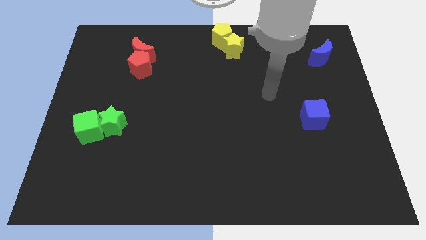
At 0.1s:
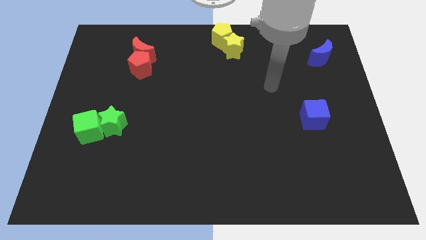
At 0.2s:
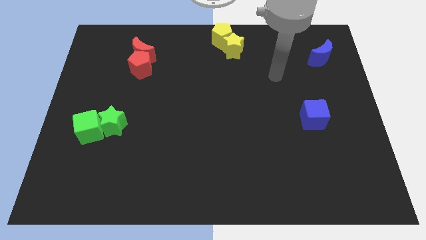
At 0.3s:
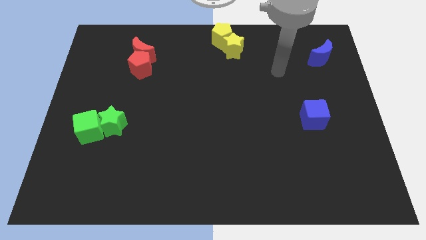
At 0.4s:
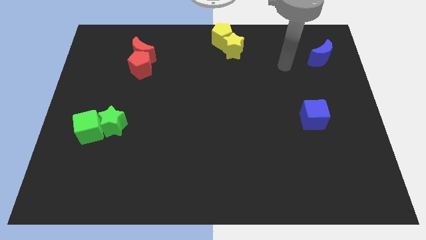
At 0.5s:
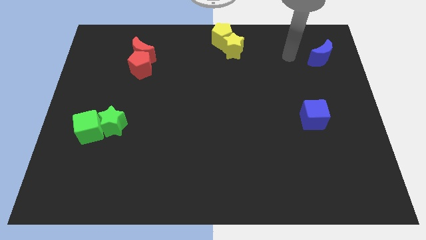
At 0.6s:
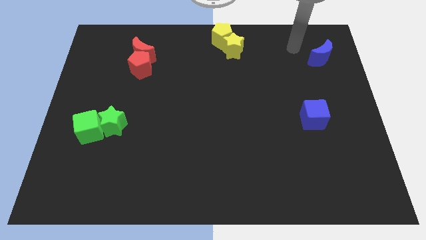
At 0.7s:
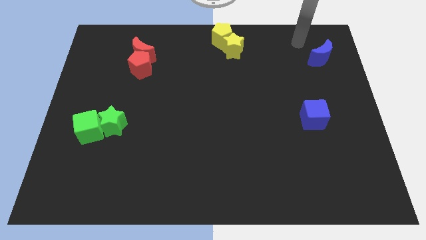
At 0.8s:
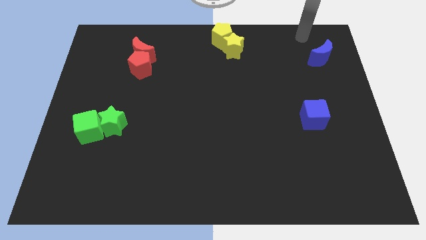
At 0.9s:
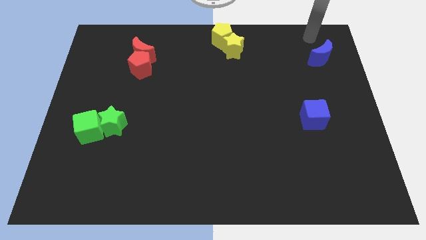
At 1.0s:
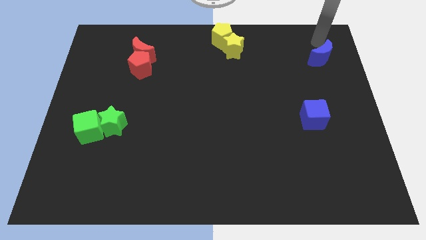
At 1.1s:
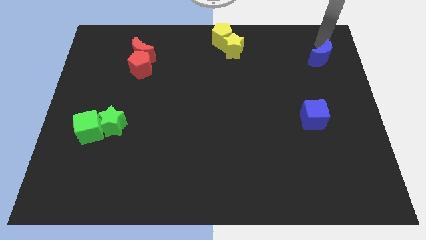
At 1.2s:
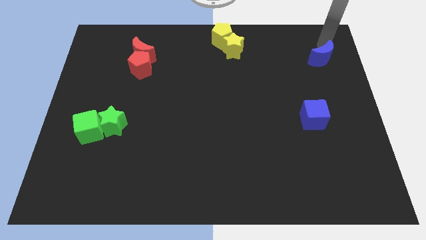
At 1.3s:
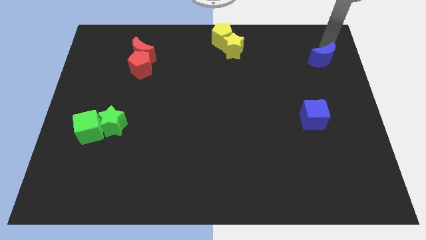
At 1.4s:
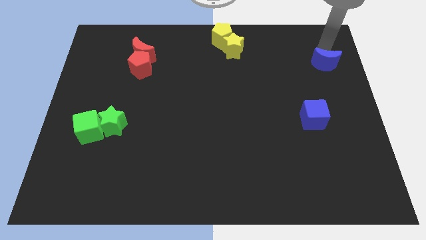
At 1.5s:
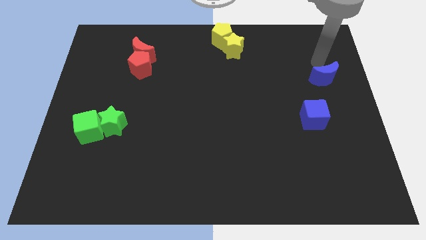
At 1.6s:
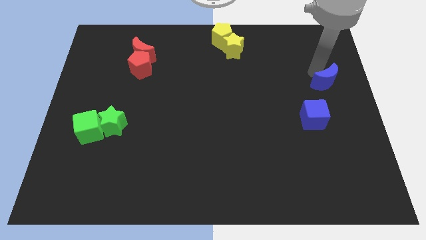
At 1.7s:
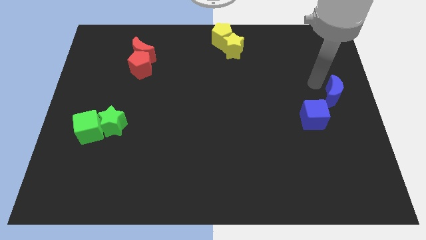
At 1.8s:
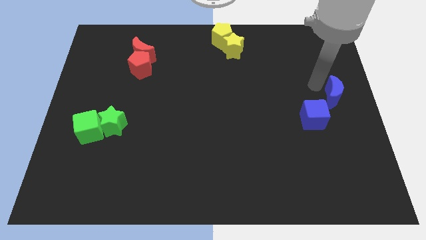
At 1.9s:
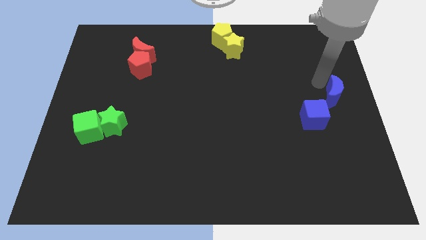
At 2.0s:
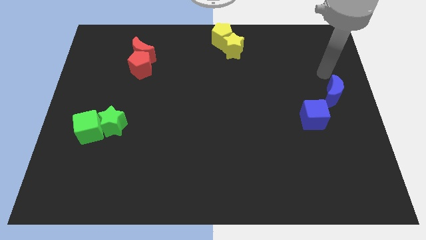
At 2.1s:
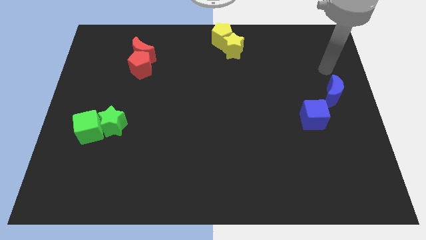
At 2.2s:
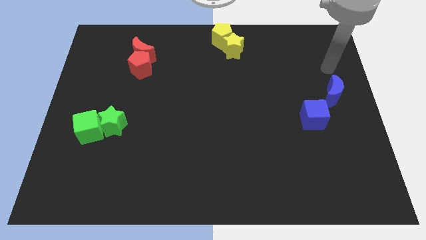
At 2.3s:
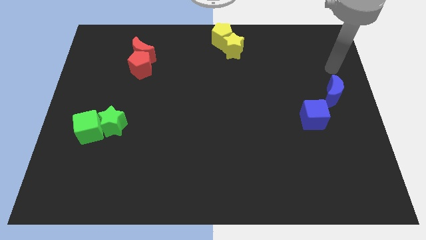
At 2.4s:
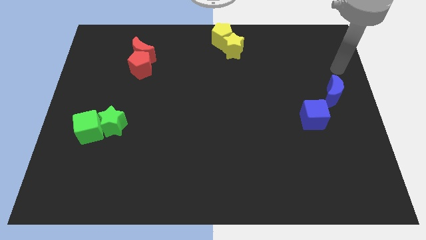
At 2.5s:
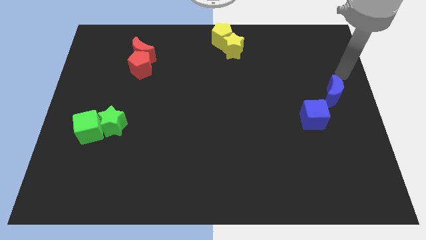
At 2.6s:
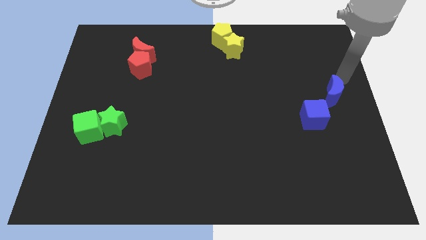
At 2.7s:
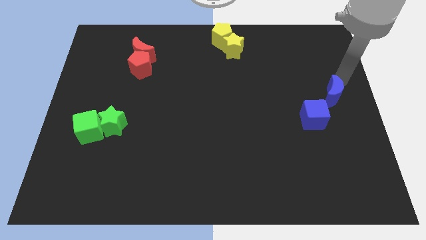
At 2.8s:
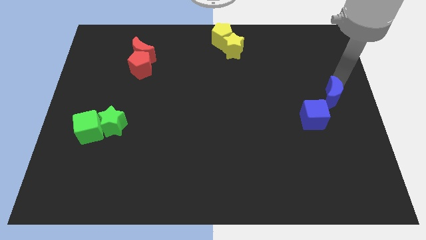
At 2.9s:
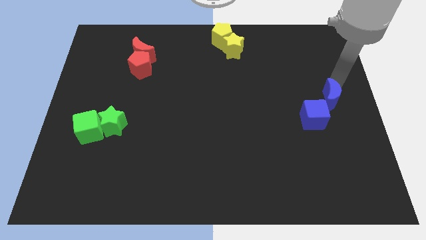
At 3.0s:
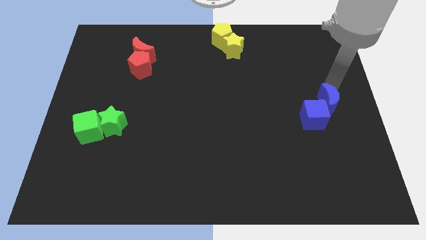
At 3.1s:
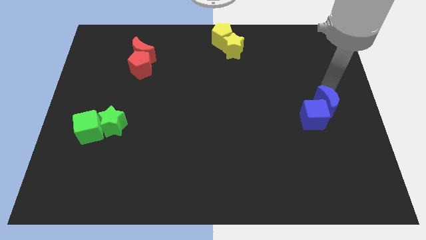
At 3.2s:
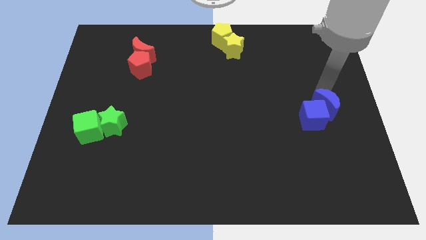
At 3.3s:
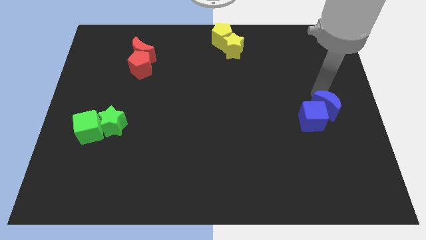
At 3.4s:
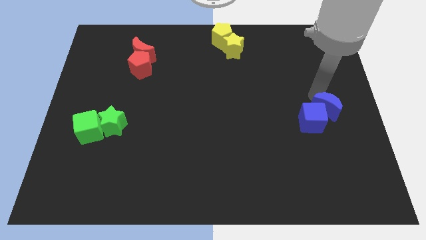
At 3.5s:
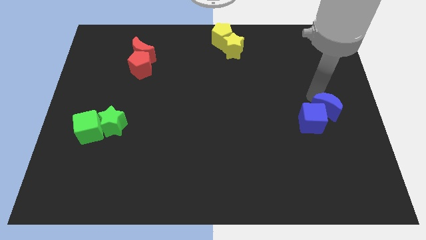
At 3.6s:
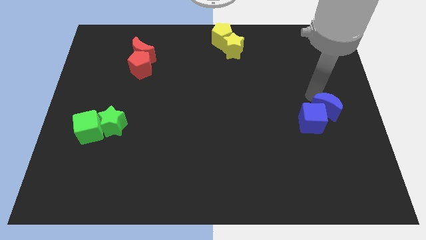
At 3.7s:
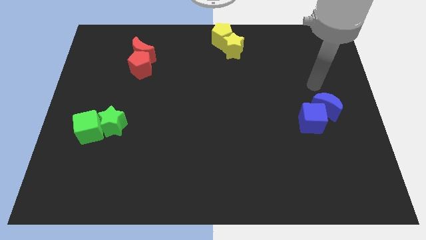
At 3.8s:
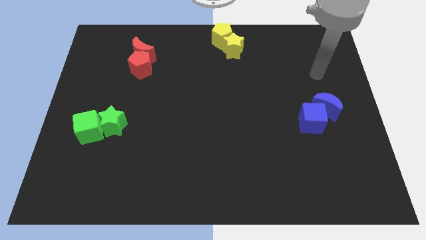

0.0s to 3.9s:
push the blue moon into the blue cube

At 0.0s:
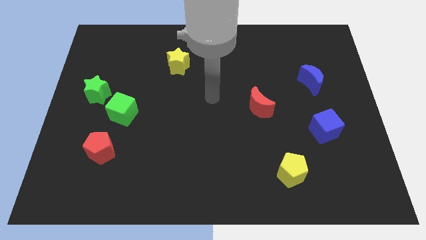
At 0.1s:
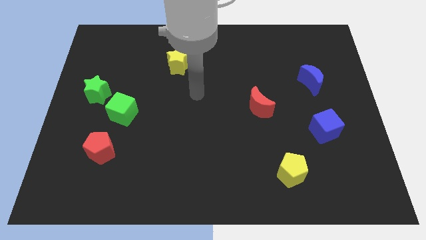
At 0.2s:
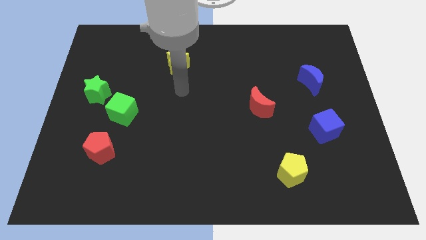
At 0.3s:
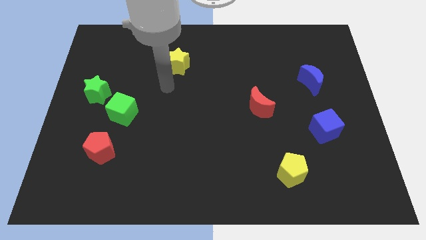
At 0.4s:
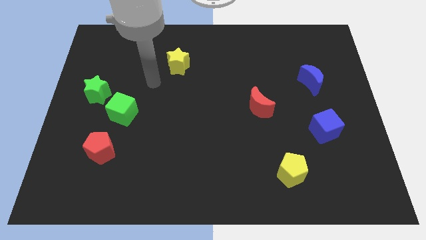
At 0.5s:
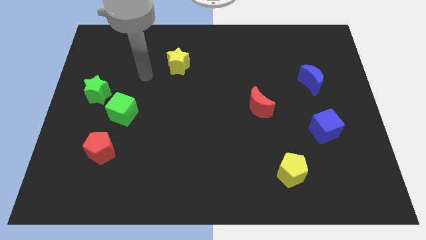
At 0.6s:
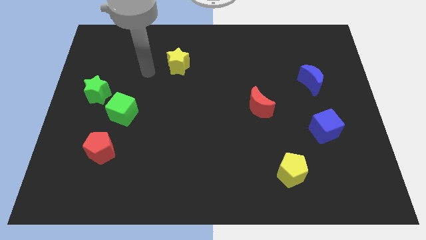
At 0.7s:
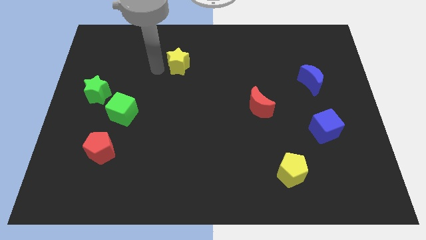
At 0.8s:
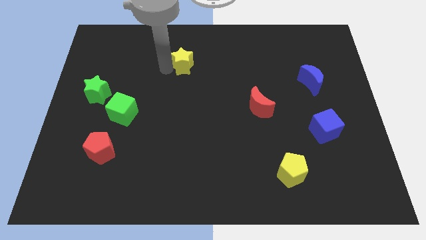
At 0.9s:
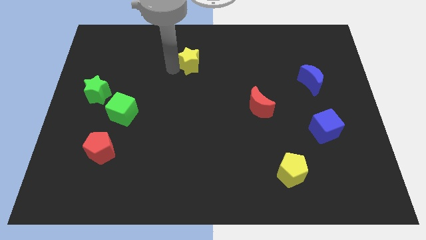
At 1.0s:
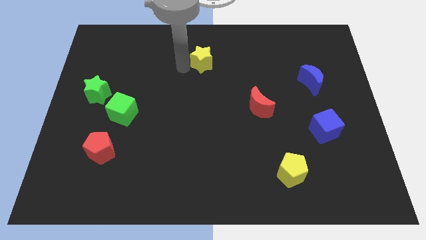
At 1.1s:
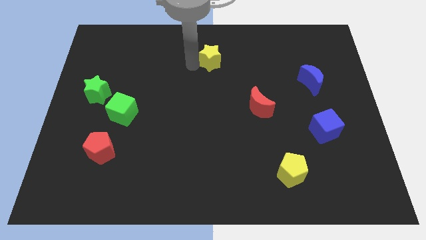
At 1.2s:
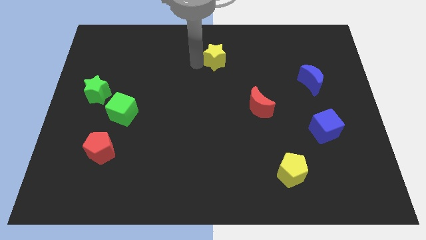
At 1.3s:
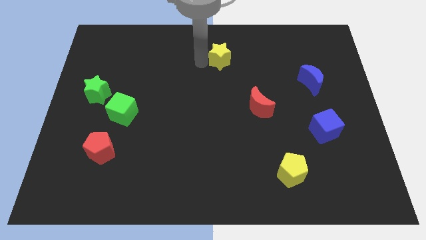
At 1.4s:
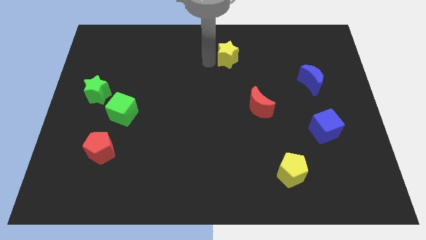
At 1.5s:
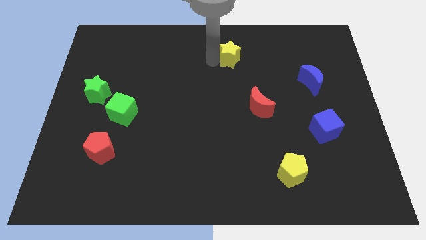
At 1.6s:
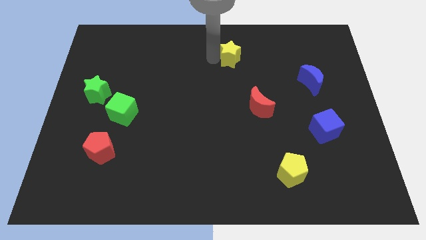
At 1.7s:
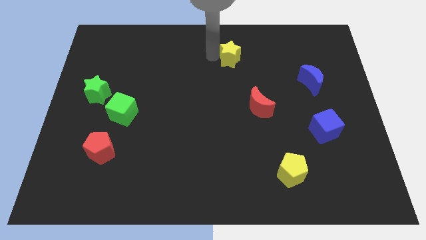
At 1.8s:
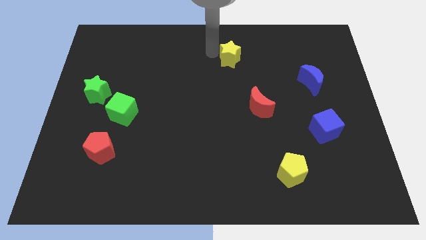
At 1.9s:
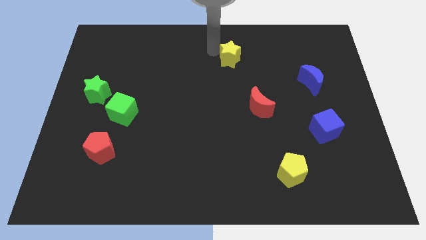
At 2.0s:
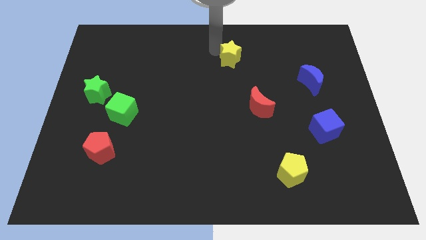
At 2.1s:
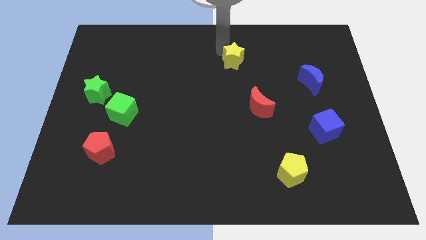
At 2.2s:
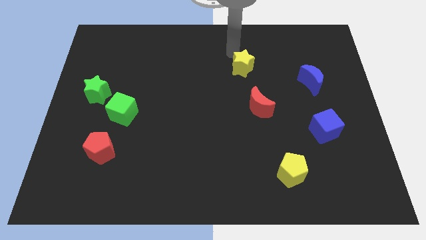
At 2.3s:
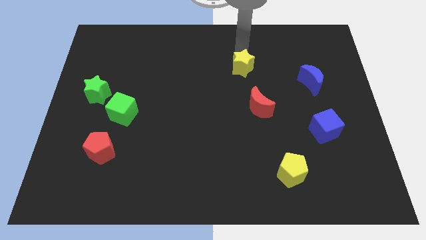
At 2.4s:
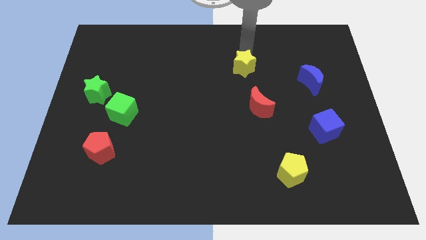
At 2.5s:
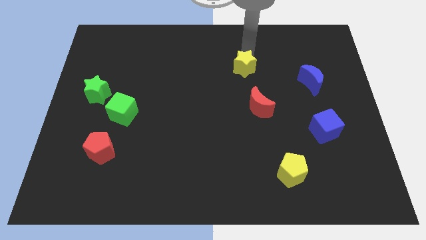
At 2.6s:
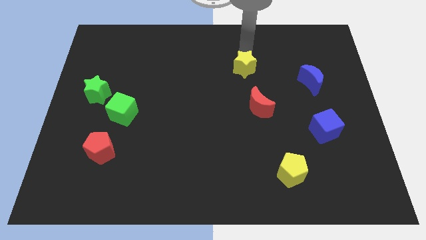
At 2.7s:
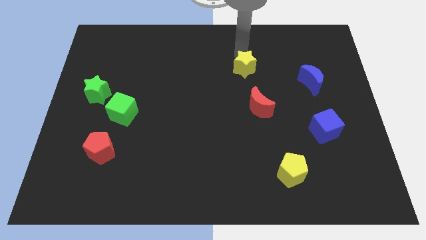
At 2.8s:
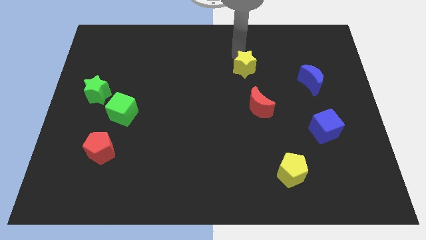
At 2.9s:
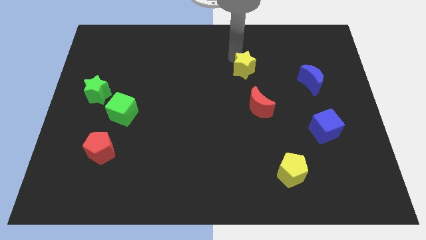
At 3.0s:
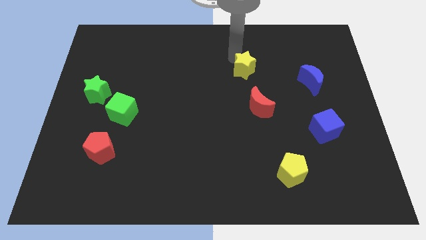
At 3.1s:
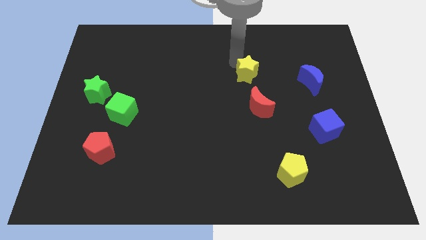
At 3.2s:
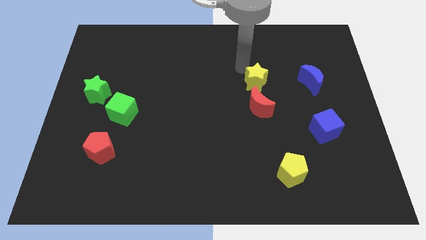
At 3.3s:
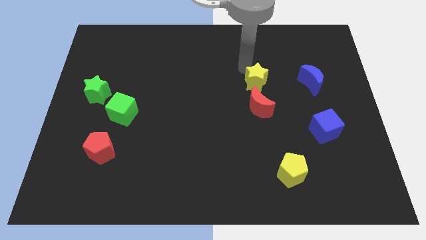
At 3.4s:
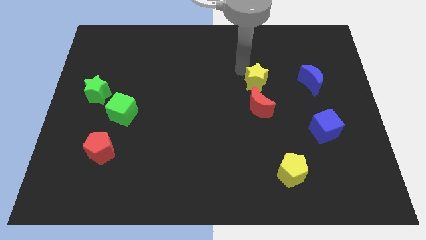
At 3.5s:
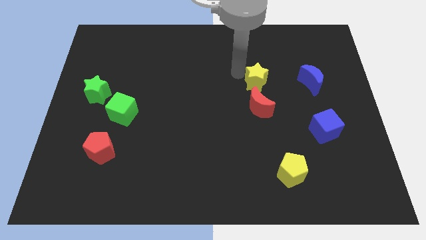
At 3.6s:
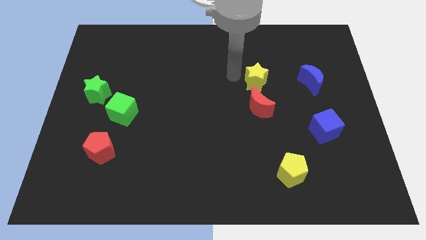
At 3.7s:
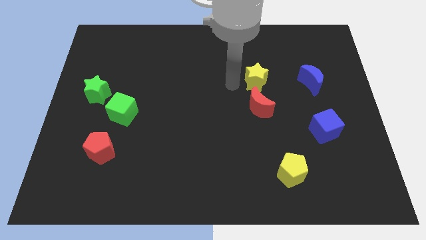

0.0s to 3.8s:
place the yellow star left to the blue moon

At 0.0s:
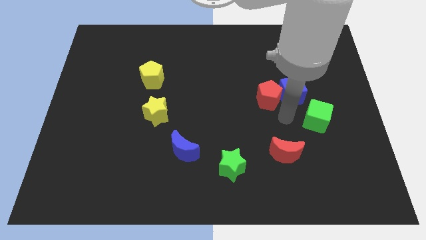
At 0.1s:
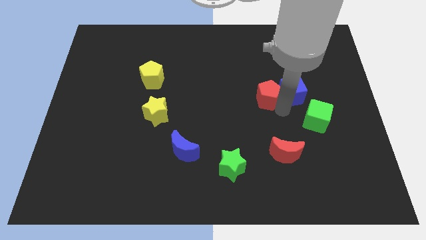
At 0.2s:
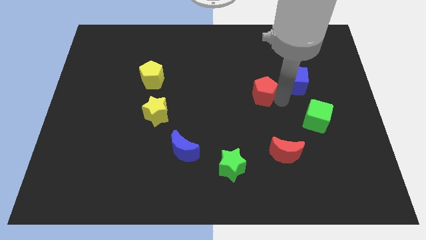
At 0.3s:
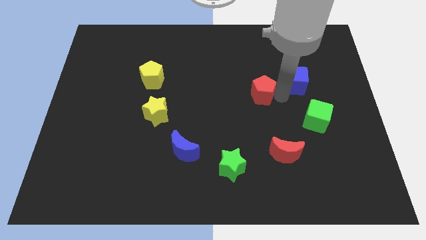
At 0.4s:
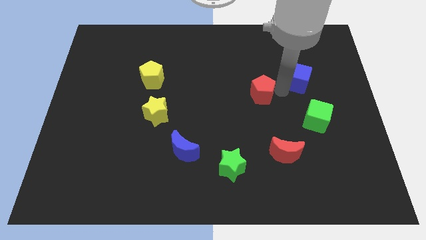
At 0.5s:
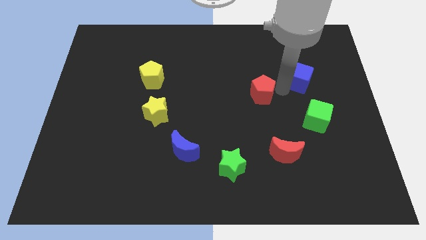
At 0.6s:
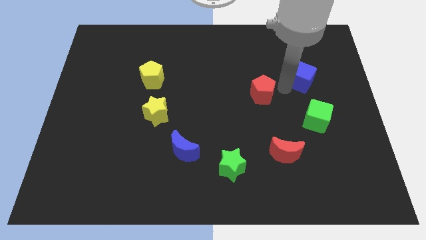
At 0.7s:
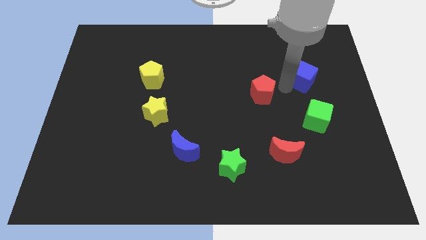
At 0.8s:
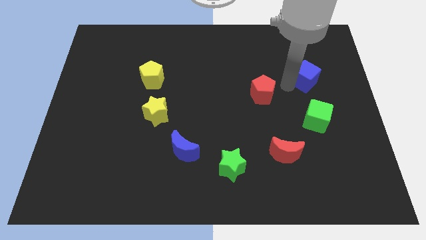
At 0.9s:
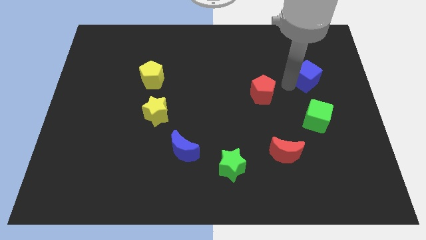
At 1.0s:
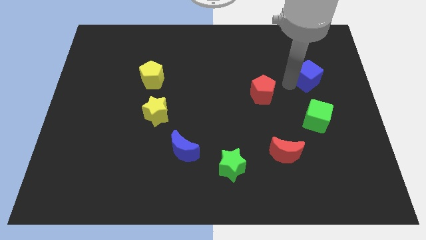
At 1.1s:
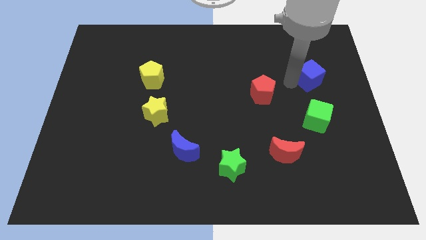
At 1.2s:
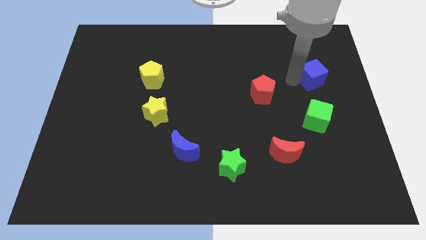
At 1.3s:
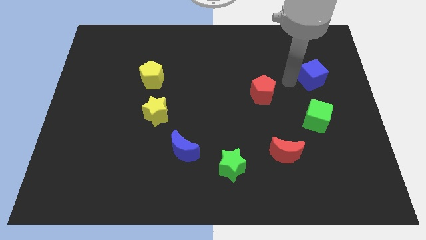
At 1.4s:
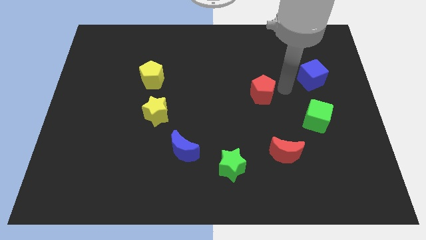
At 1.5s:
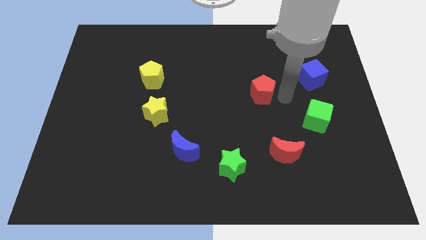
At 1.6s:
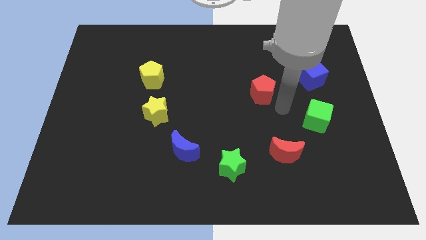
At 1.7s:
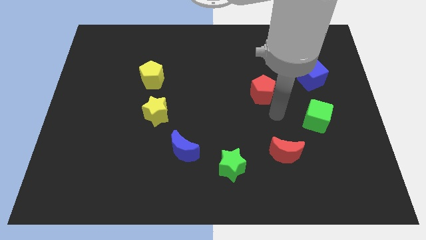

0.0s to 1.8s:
place the blue cube above the green cube
